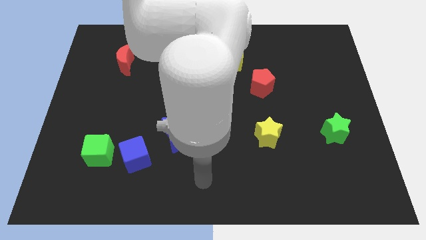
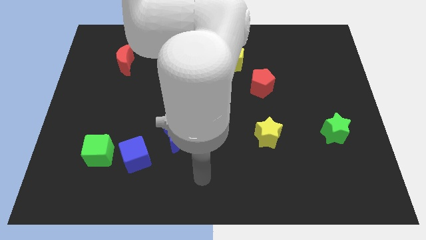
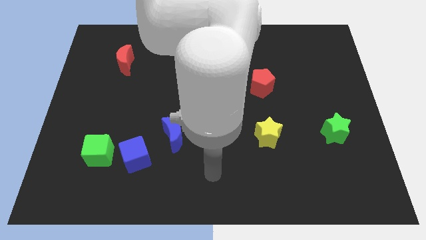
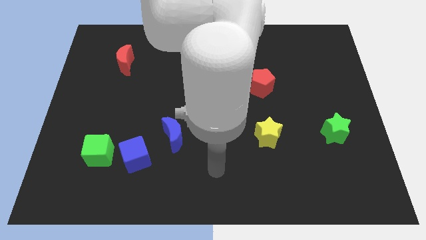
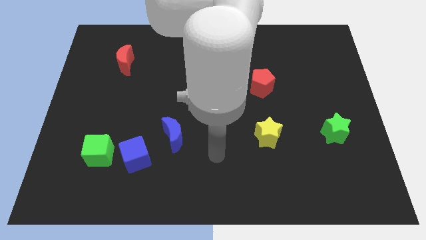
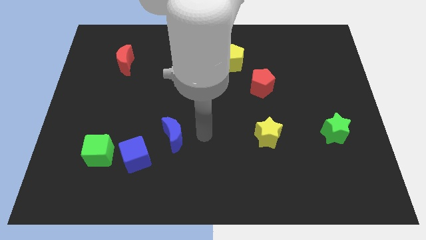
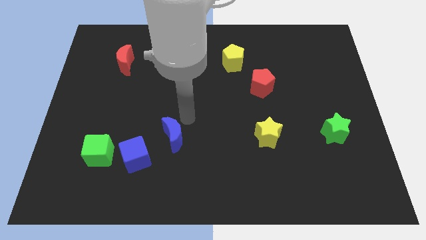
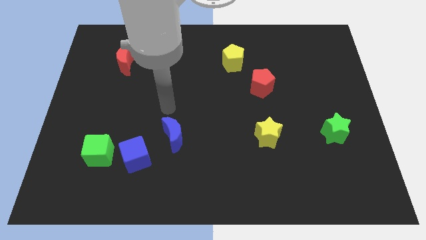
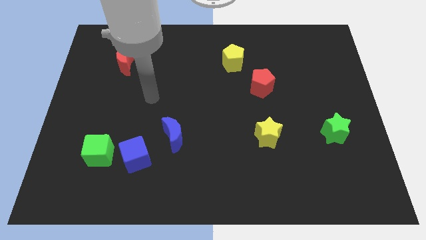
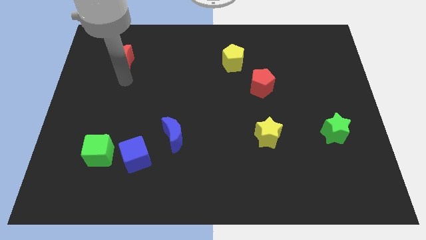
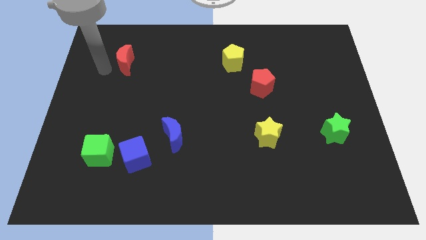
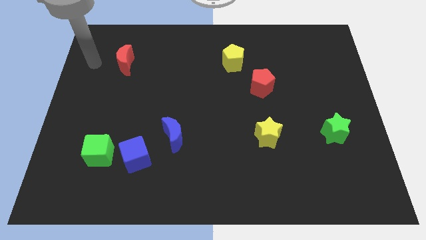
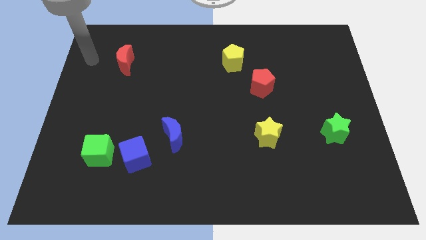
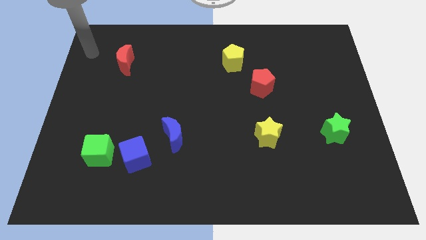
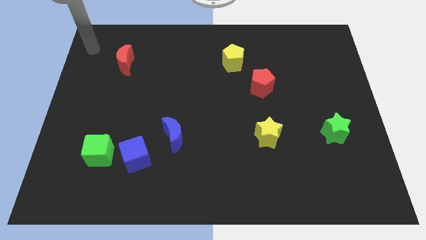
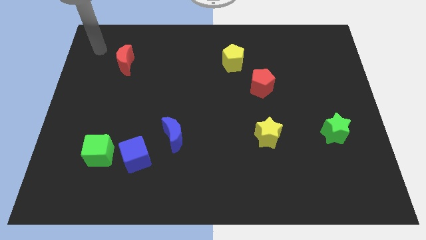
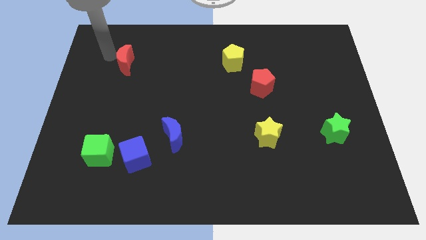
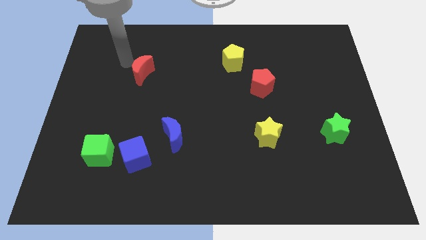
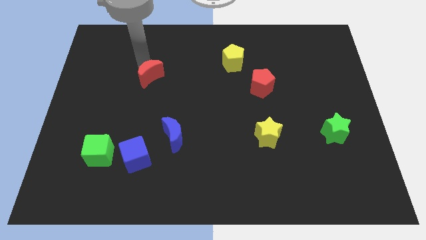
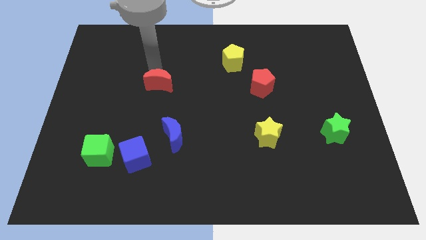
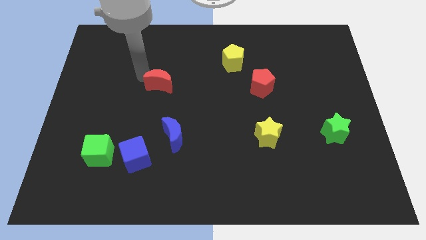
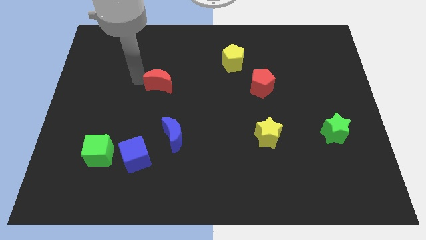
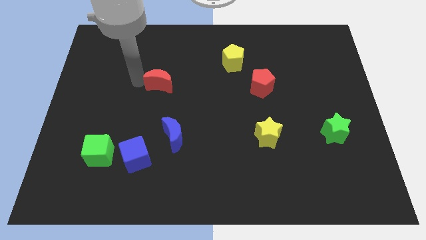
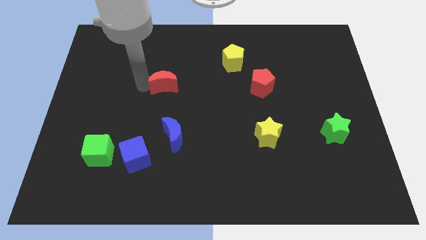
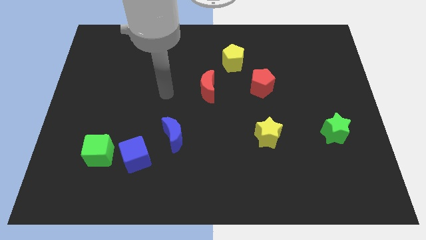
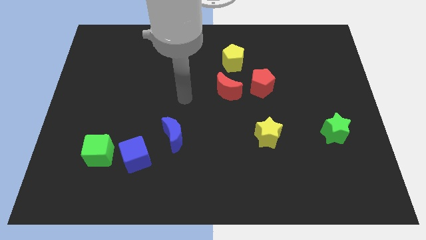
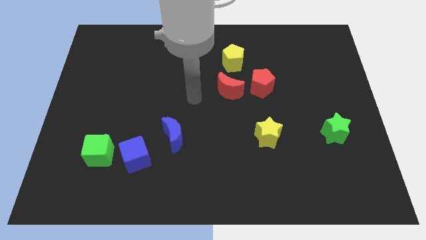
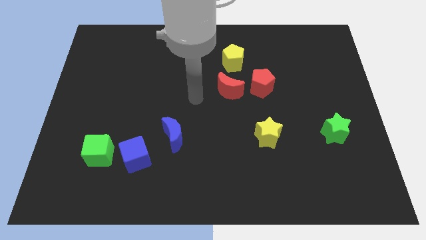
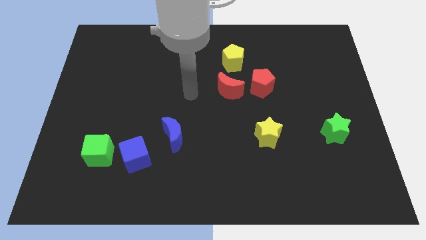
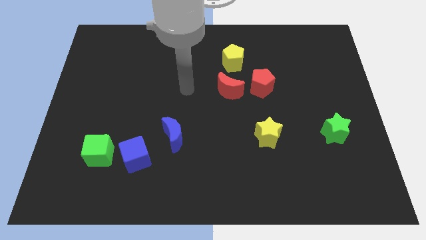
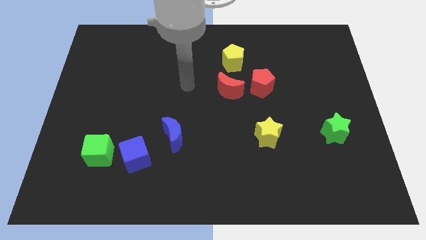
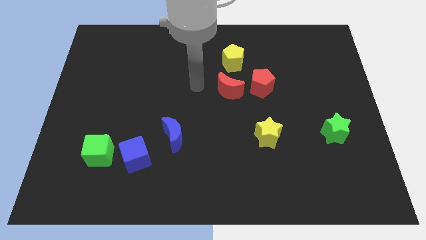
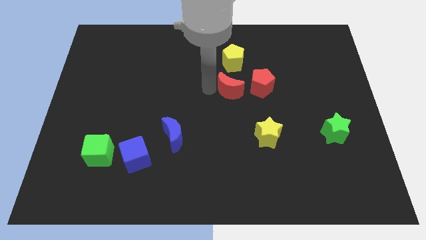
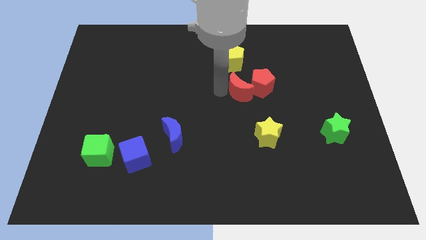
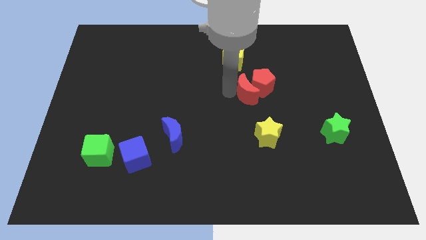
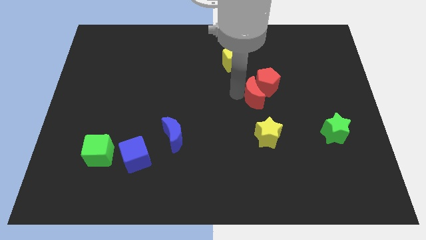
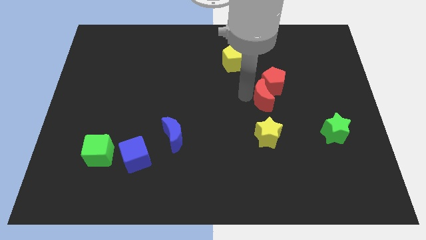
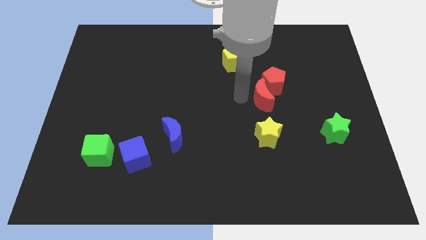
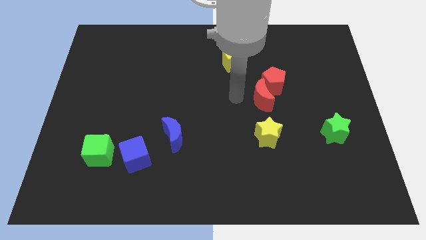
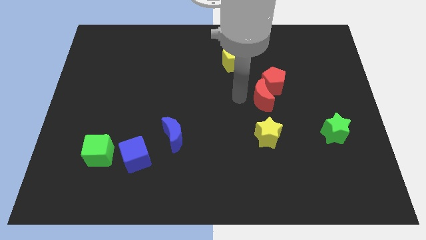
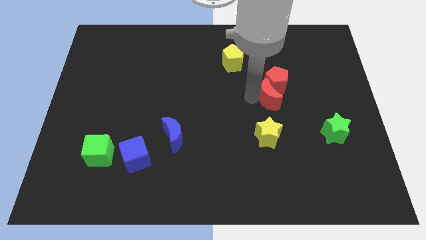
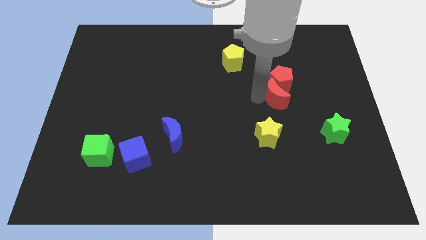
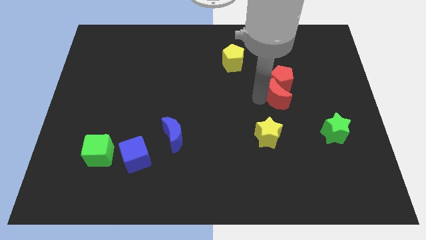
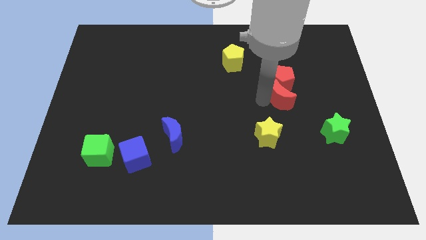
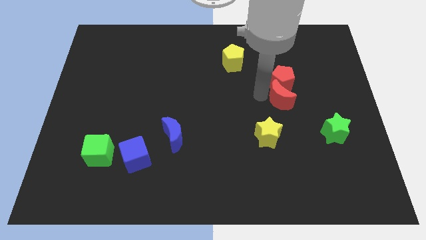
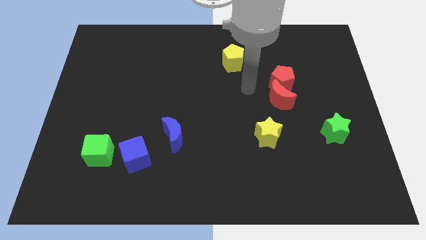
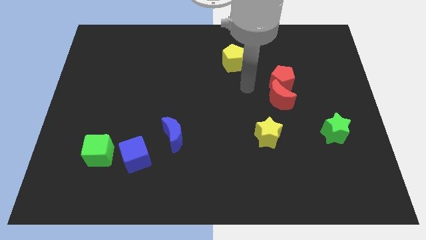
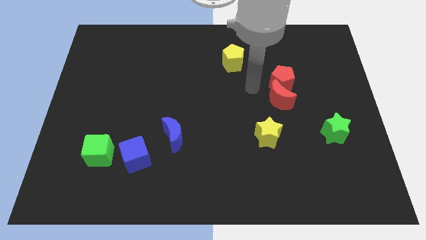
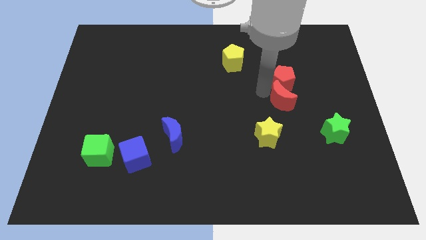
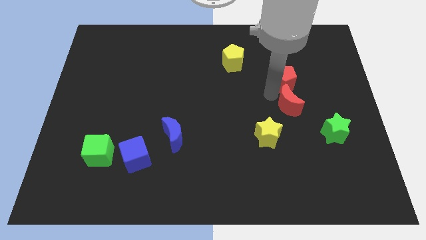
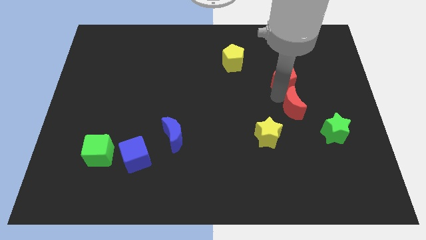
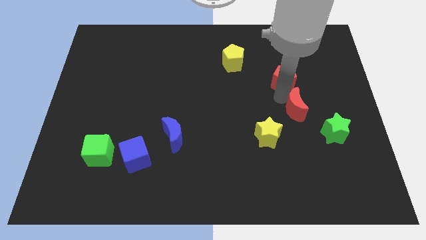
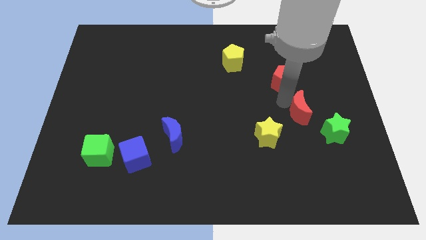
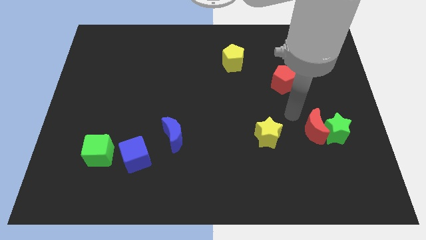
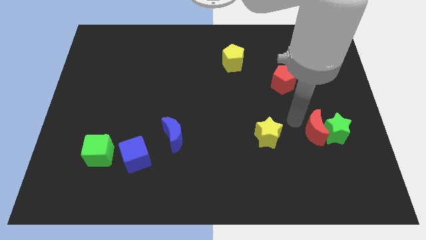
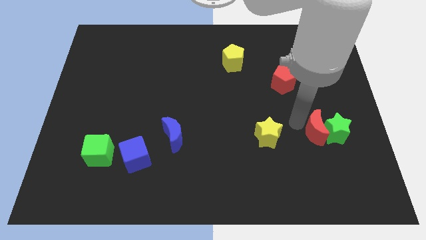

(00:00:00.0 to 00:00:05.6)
slide the red moon close to the green star

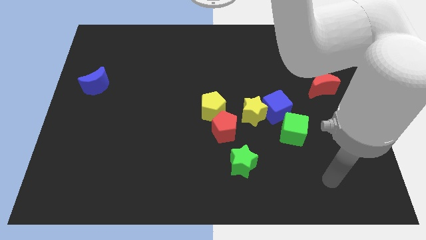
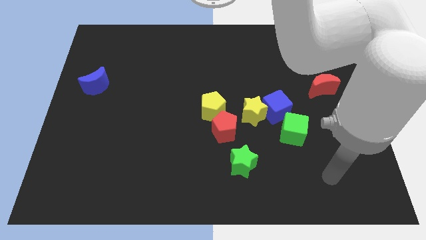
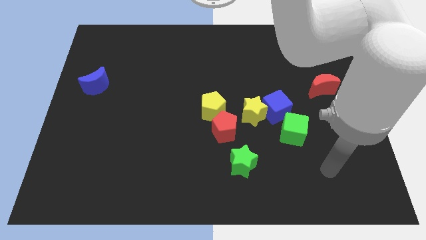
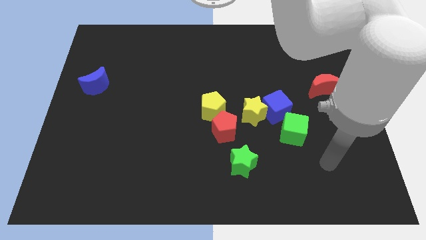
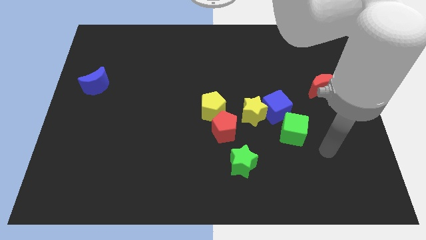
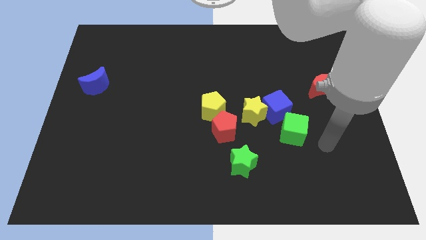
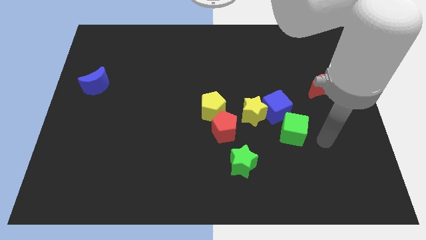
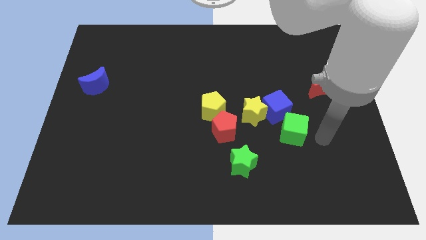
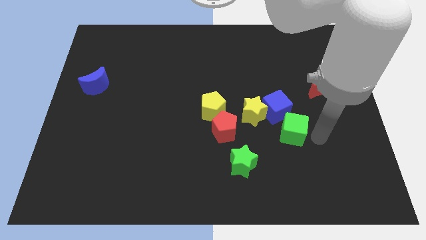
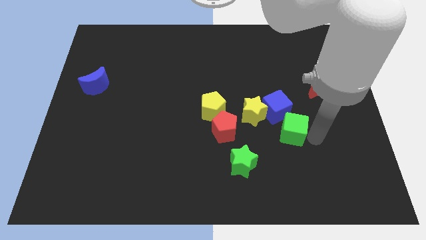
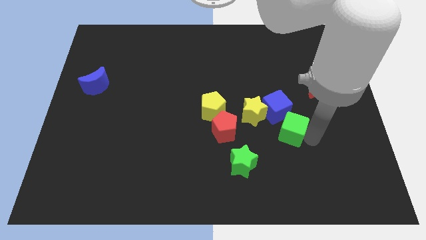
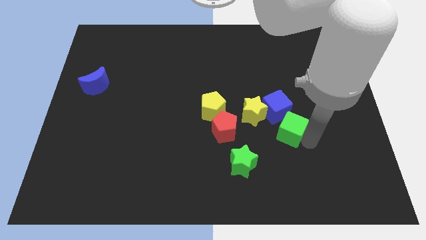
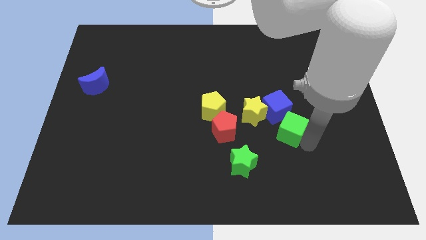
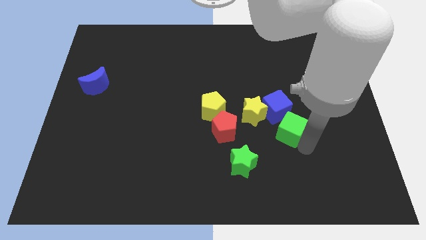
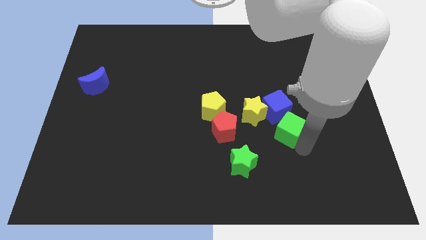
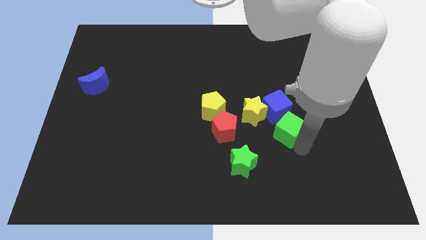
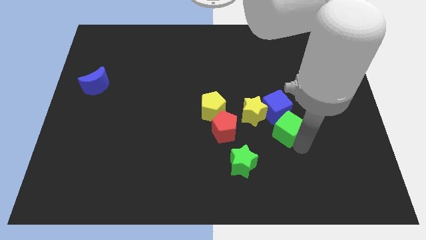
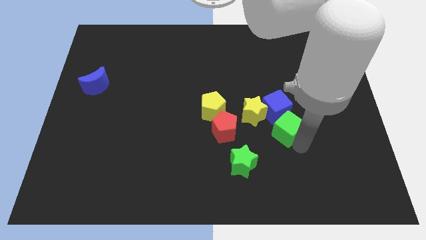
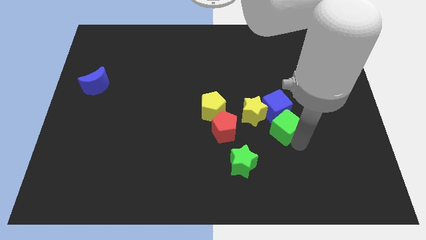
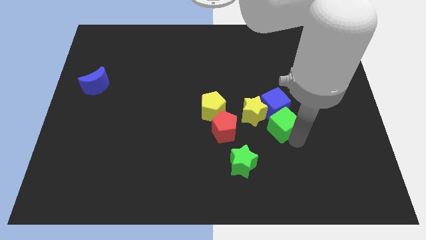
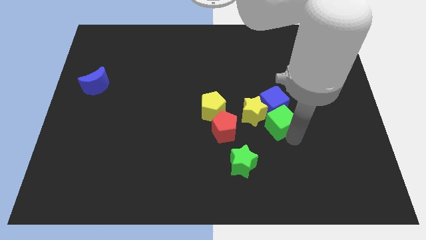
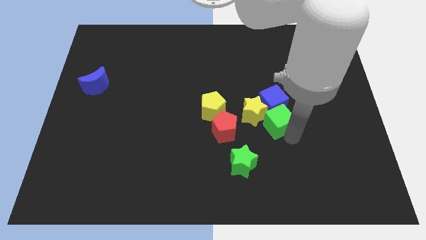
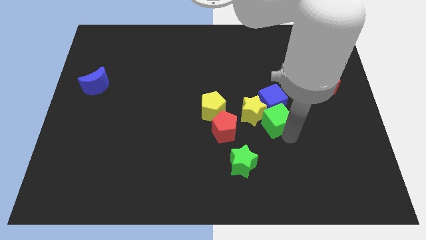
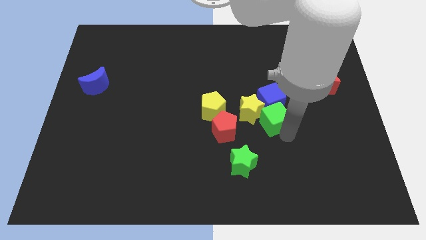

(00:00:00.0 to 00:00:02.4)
slide the green cube towards the yellow star

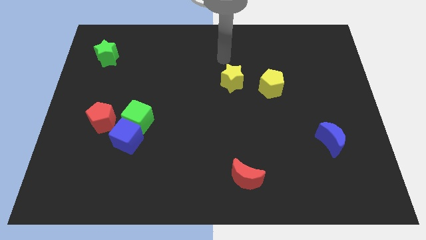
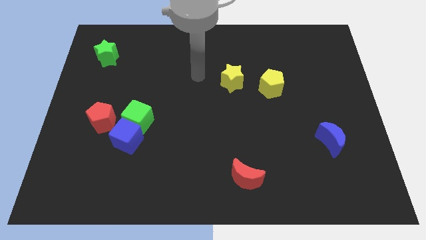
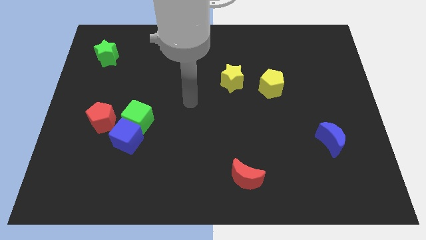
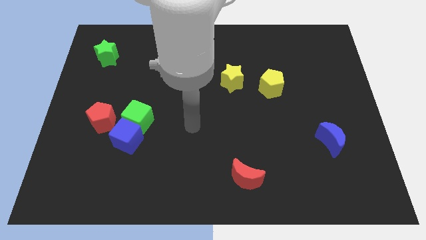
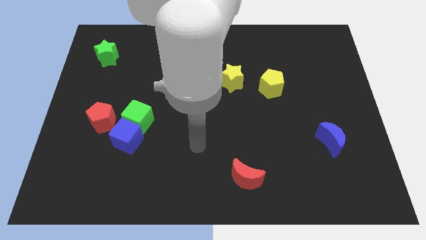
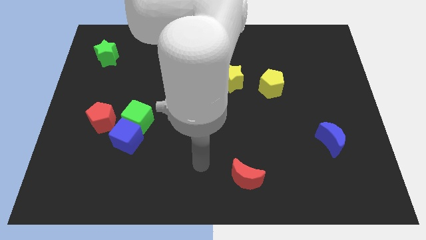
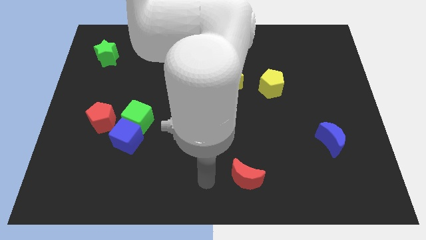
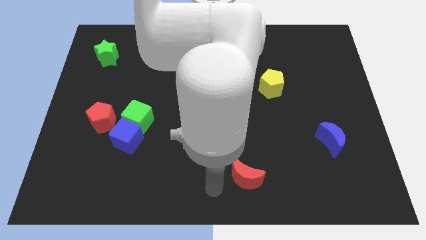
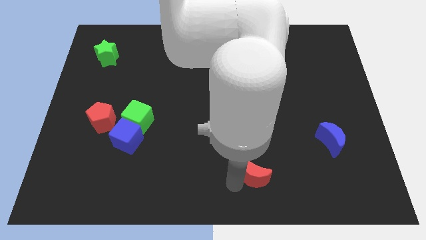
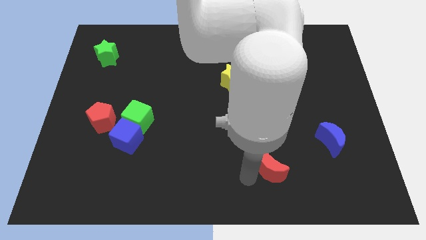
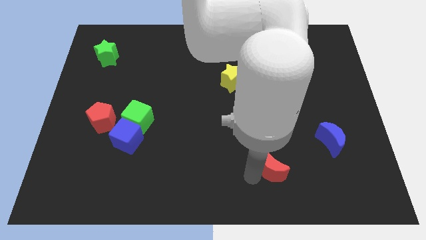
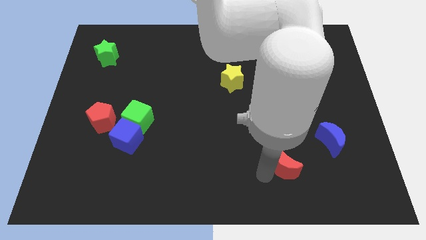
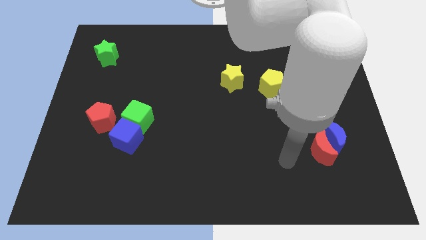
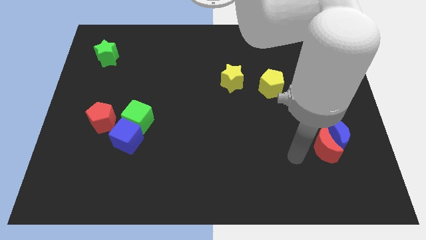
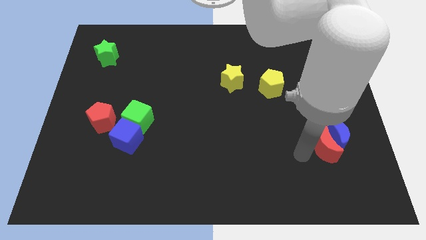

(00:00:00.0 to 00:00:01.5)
push the red moon next to the blue moon
